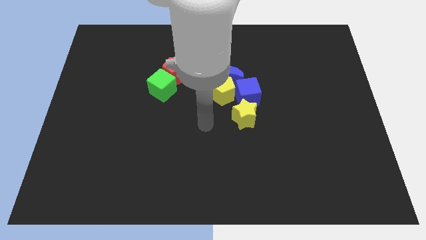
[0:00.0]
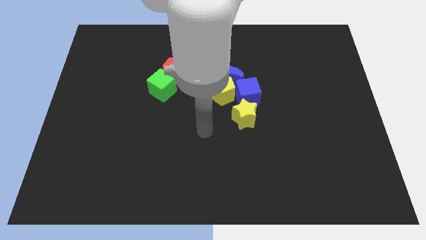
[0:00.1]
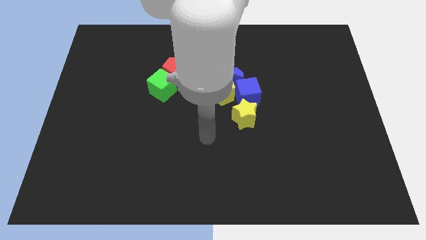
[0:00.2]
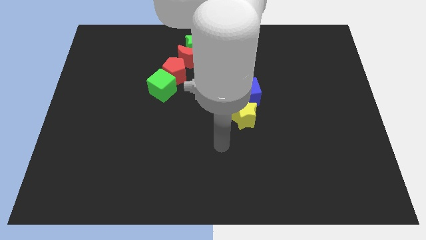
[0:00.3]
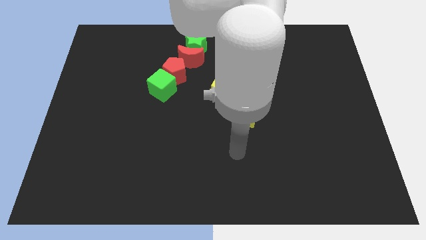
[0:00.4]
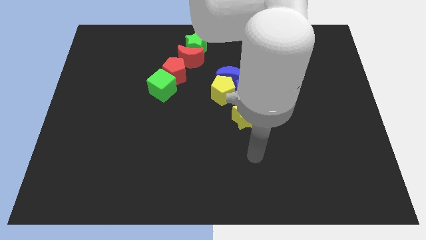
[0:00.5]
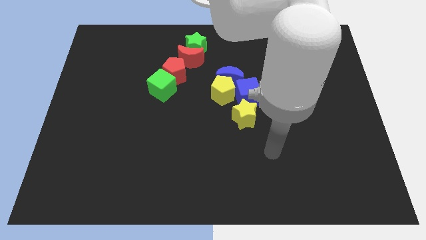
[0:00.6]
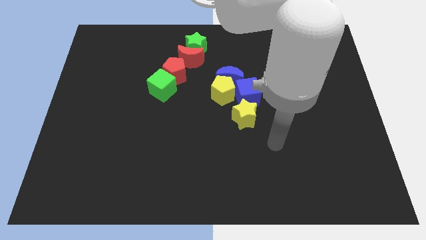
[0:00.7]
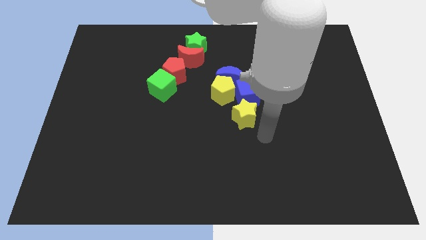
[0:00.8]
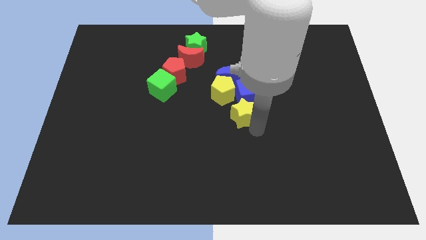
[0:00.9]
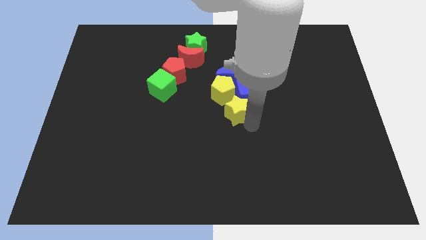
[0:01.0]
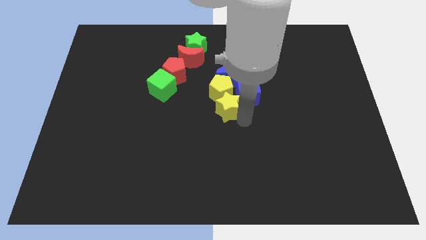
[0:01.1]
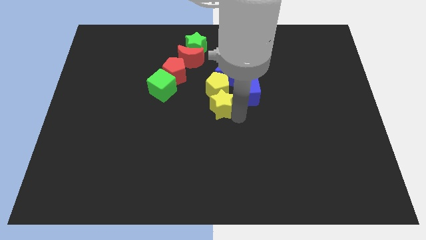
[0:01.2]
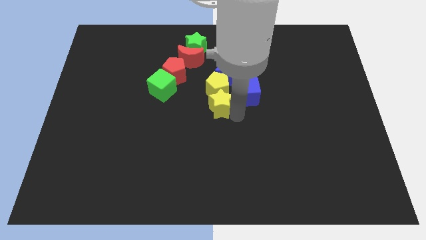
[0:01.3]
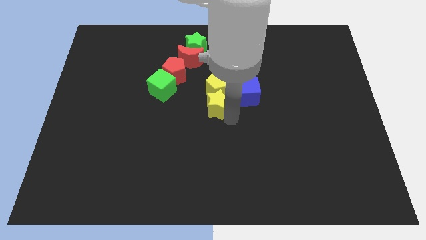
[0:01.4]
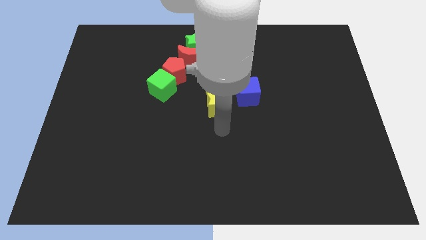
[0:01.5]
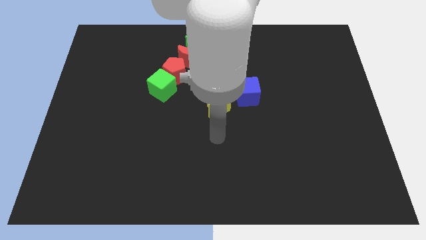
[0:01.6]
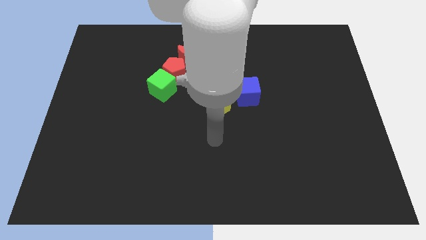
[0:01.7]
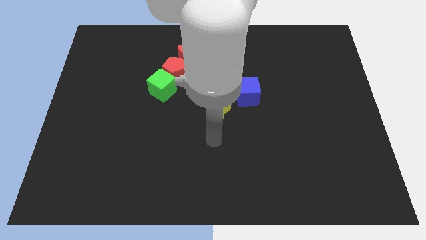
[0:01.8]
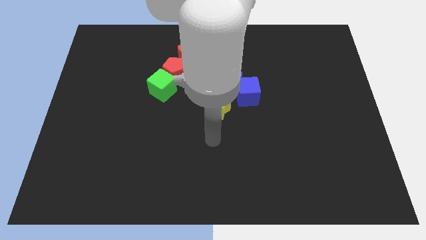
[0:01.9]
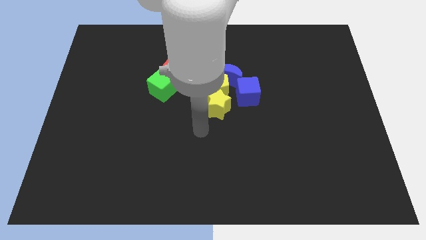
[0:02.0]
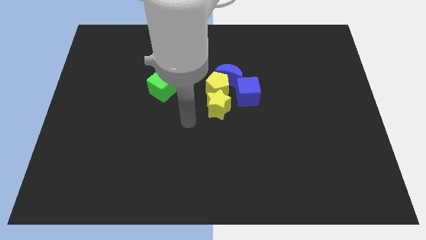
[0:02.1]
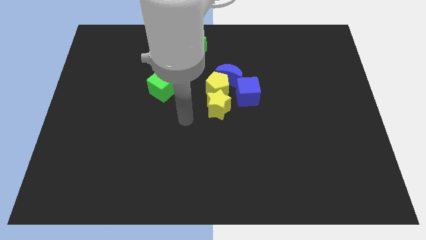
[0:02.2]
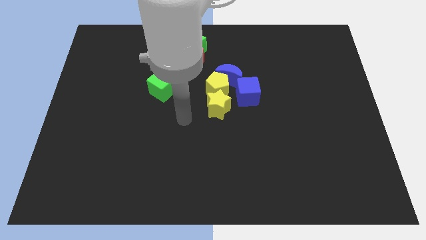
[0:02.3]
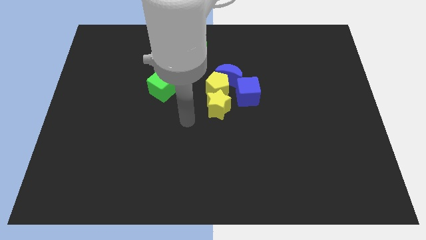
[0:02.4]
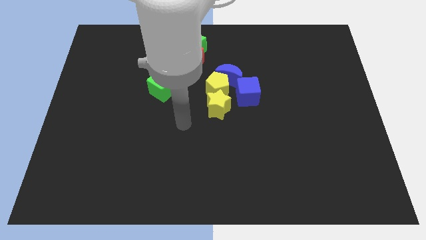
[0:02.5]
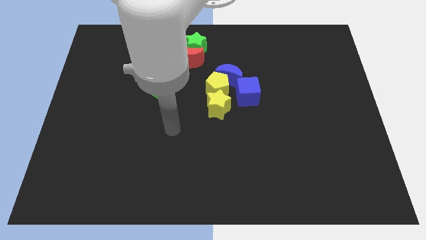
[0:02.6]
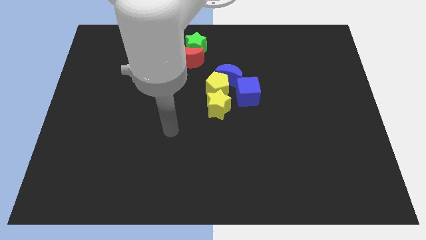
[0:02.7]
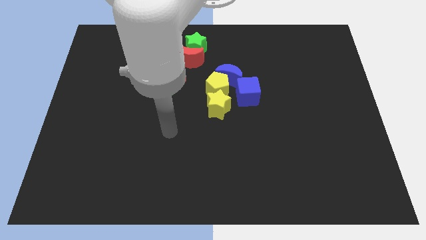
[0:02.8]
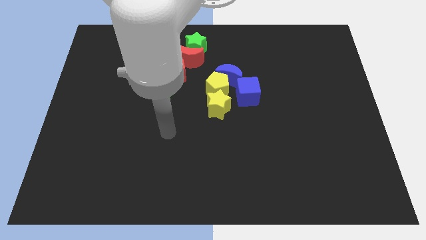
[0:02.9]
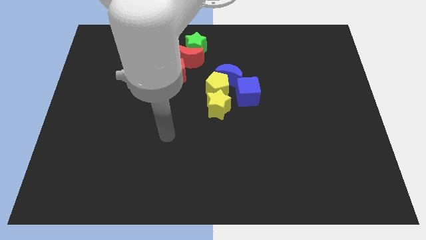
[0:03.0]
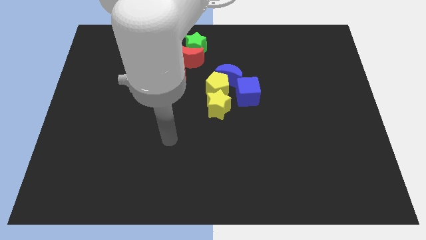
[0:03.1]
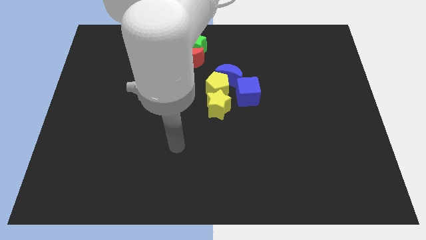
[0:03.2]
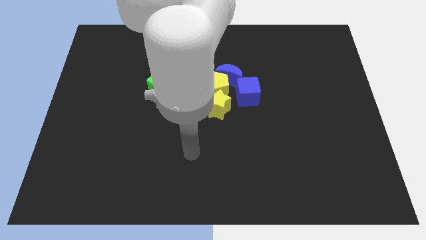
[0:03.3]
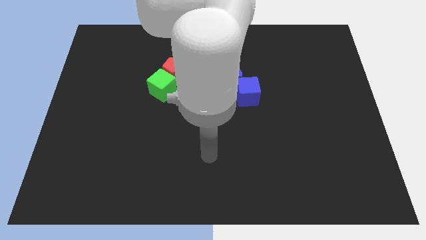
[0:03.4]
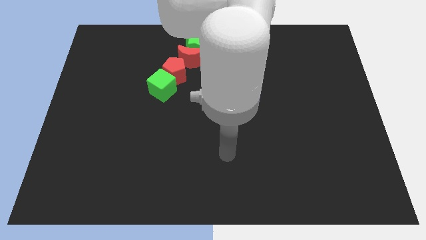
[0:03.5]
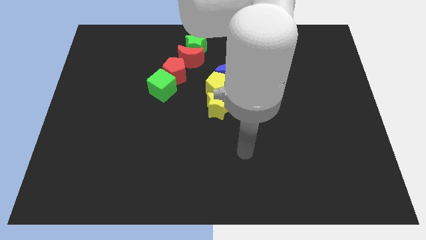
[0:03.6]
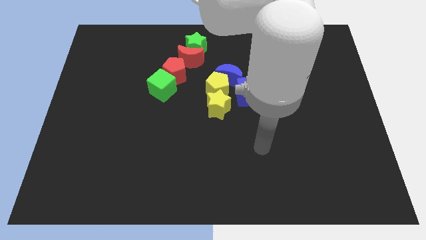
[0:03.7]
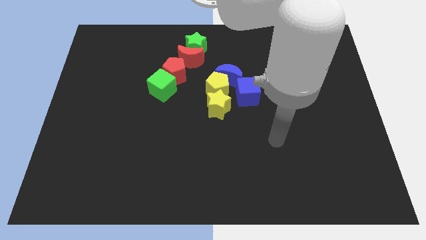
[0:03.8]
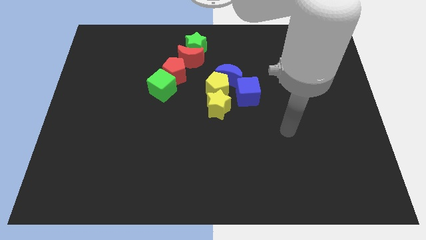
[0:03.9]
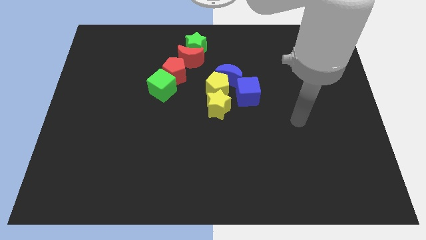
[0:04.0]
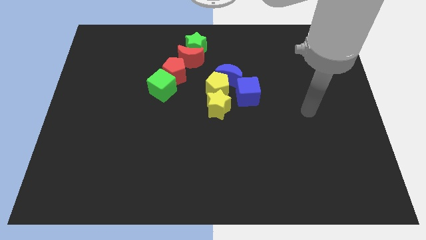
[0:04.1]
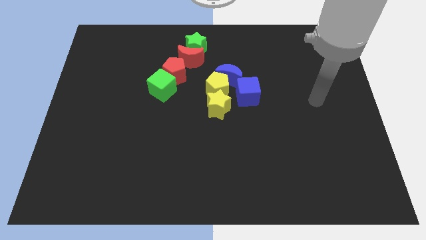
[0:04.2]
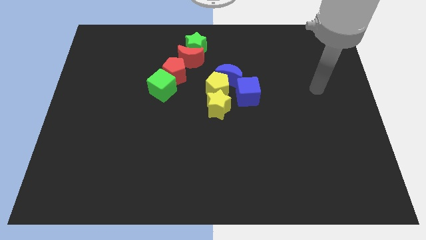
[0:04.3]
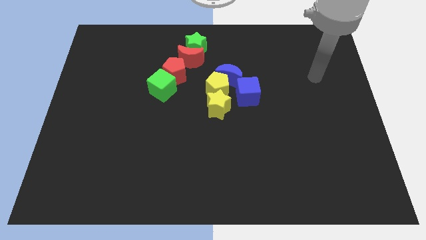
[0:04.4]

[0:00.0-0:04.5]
push the yellow star into the yellow pentagon

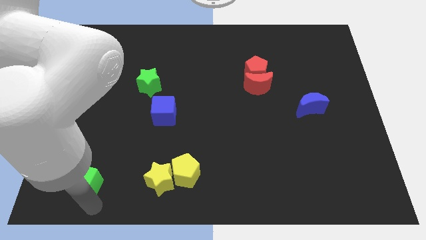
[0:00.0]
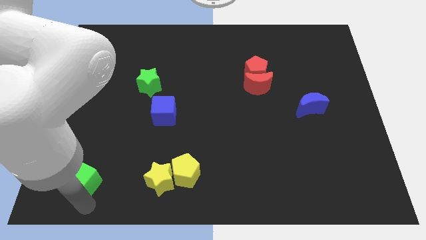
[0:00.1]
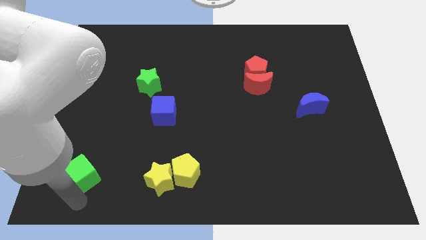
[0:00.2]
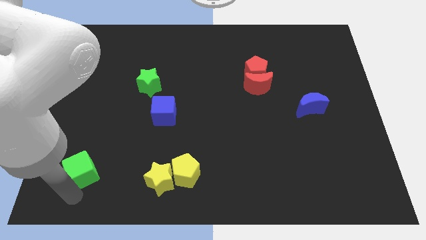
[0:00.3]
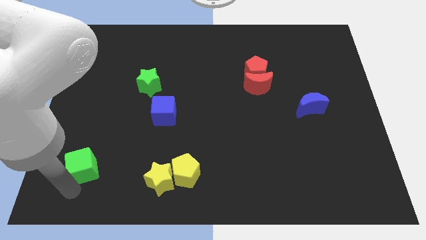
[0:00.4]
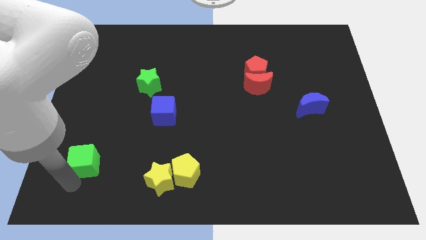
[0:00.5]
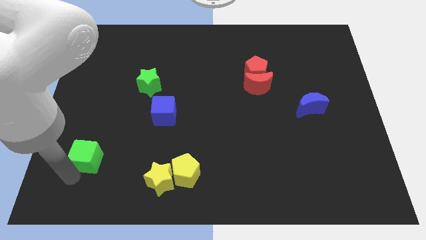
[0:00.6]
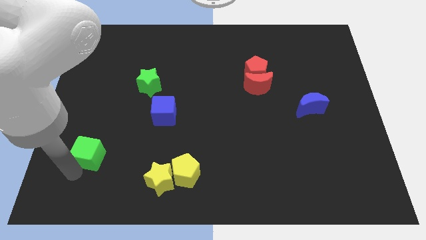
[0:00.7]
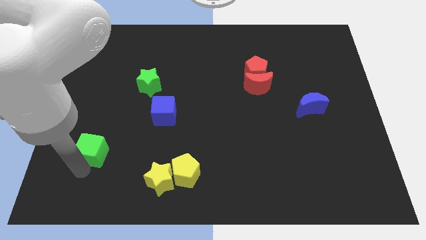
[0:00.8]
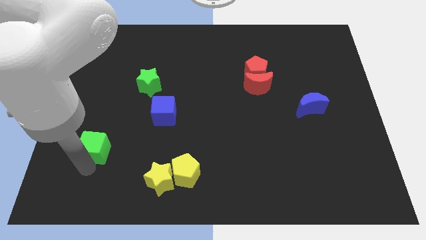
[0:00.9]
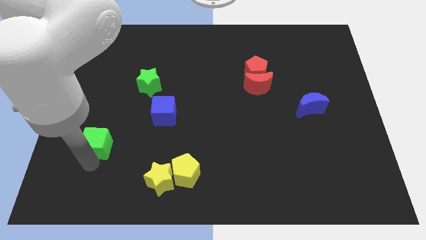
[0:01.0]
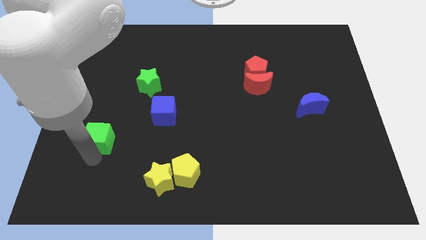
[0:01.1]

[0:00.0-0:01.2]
move the green cube to the top left to yellow star

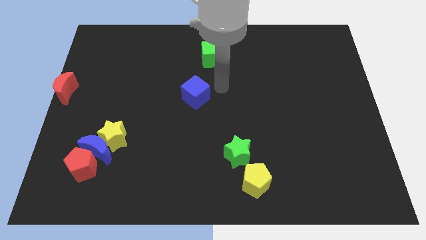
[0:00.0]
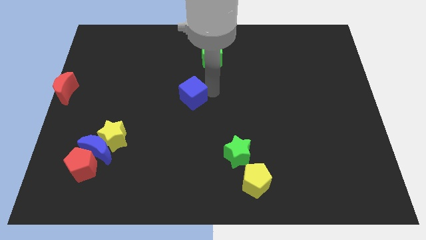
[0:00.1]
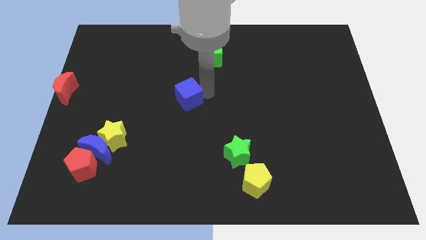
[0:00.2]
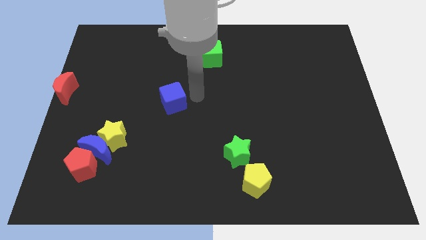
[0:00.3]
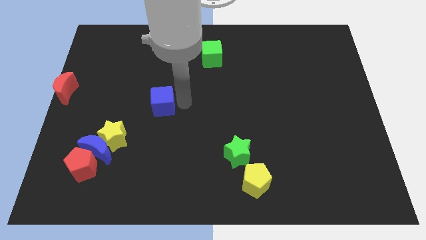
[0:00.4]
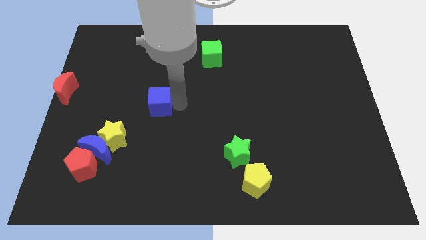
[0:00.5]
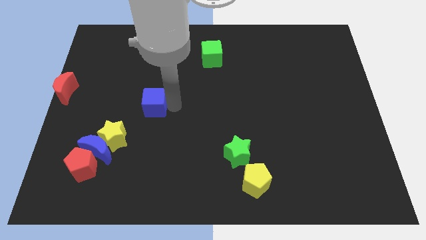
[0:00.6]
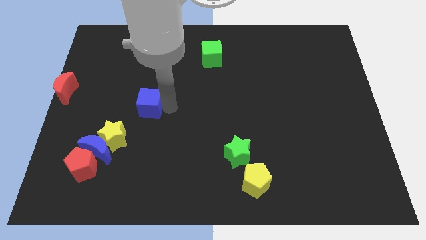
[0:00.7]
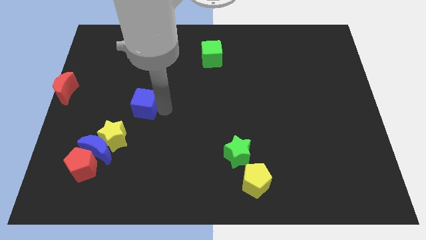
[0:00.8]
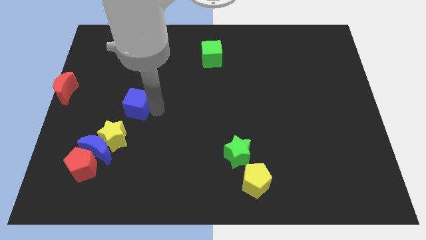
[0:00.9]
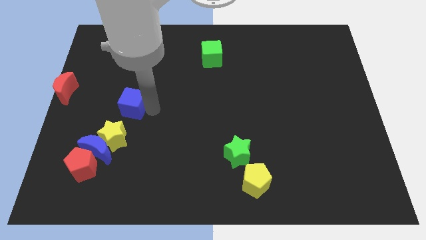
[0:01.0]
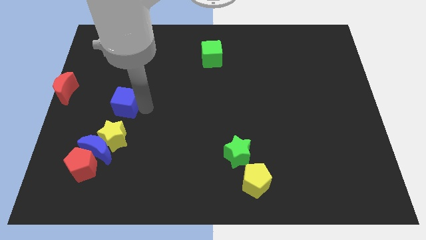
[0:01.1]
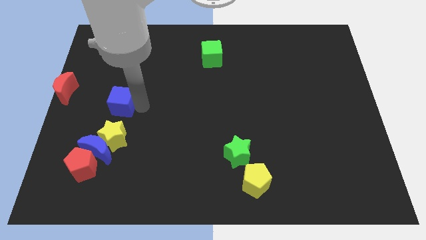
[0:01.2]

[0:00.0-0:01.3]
push blue cube above yellow star

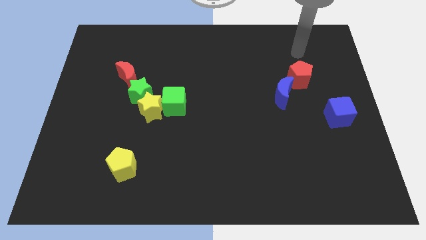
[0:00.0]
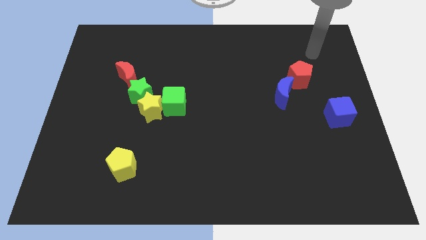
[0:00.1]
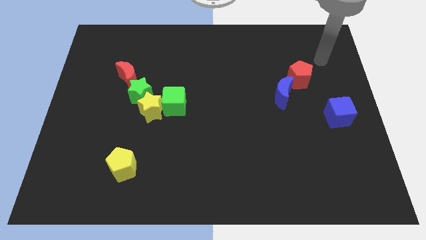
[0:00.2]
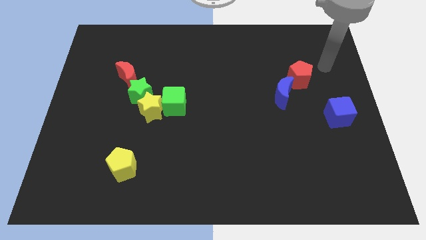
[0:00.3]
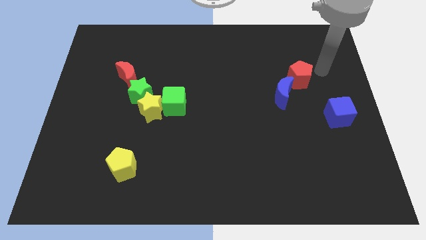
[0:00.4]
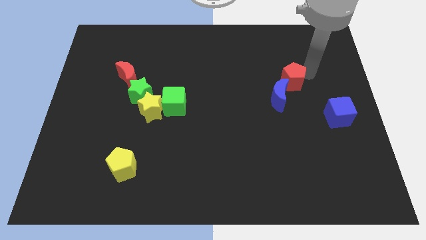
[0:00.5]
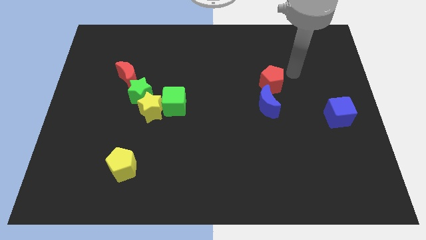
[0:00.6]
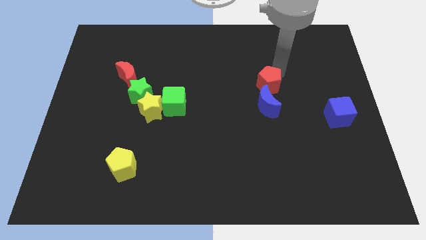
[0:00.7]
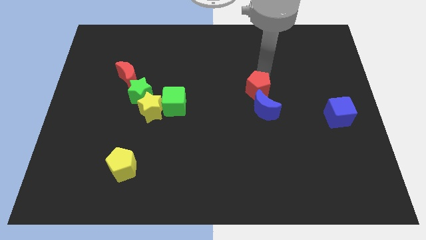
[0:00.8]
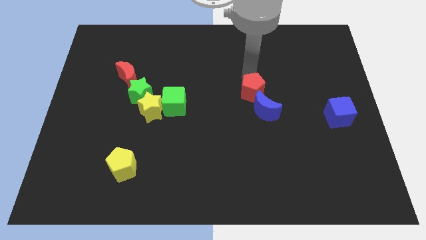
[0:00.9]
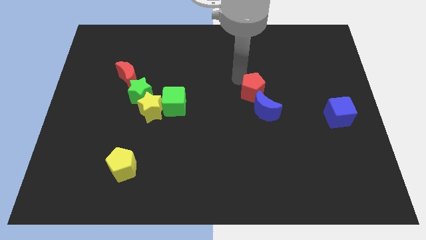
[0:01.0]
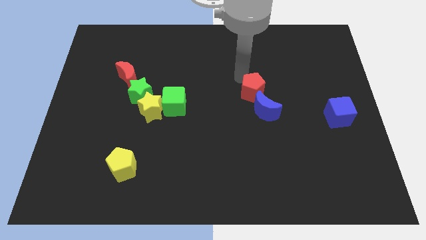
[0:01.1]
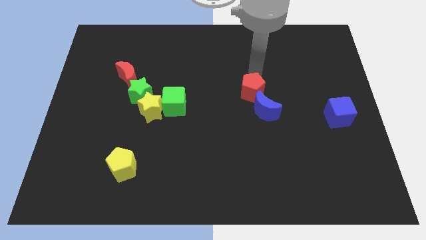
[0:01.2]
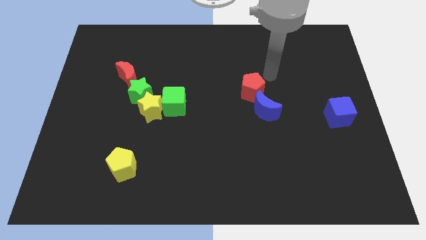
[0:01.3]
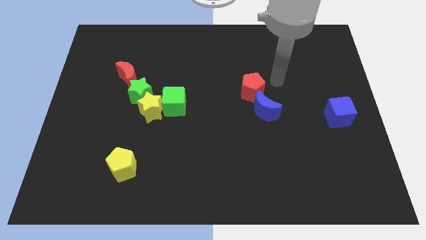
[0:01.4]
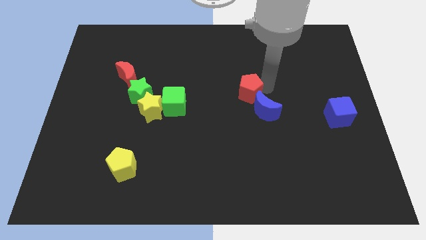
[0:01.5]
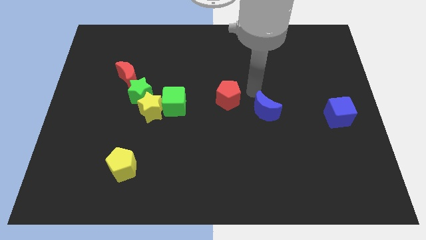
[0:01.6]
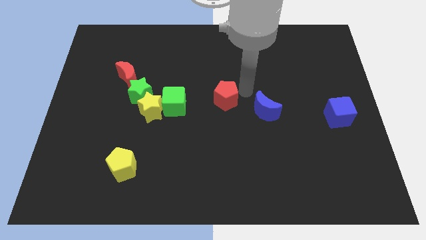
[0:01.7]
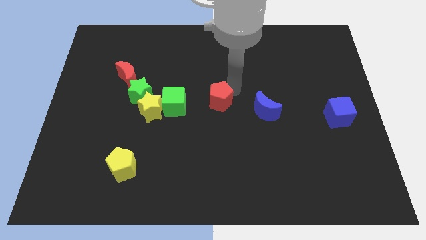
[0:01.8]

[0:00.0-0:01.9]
push the red pentagon towards the green cube
